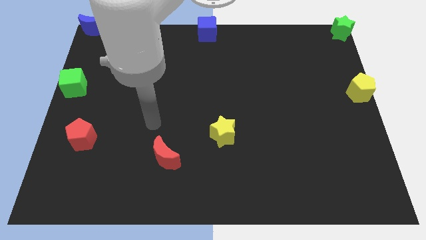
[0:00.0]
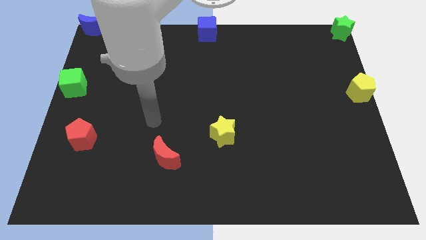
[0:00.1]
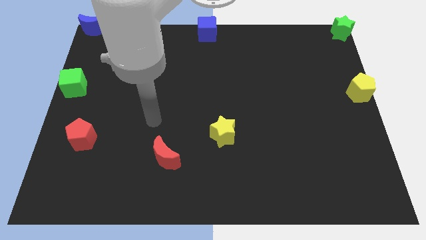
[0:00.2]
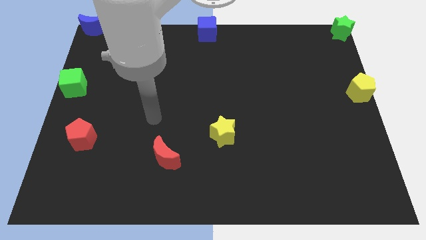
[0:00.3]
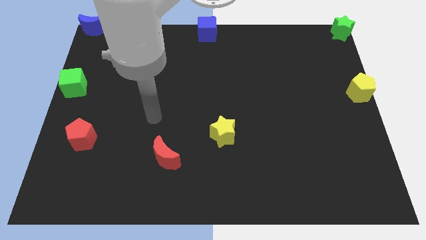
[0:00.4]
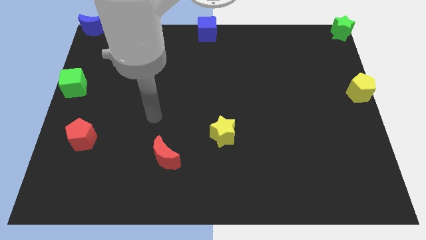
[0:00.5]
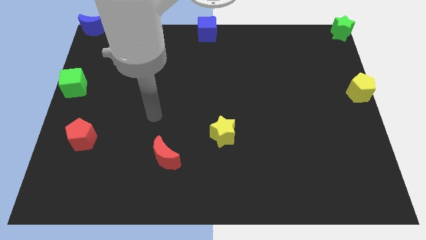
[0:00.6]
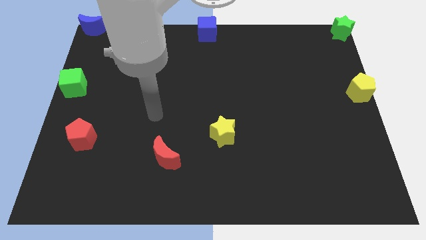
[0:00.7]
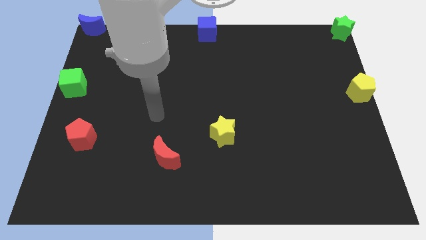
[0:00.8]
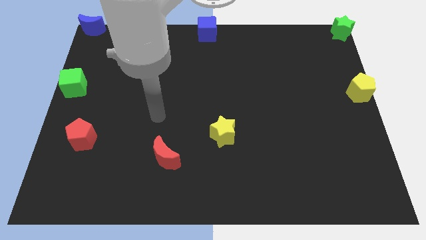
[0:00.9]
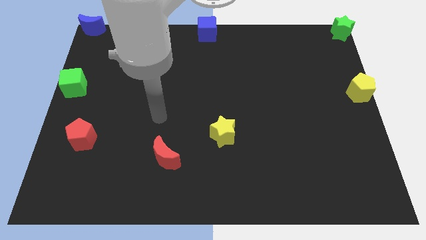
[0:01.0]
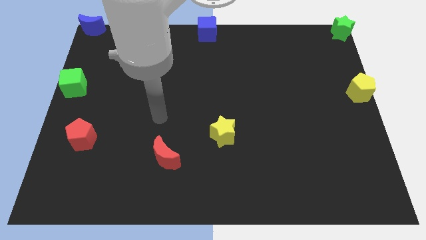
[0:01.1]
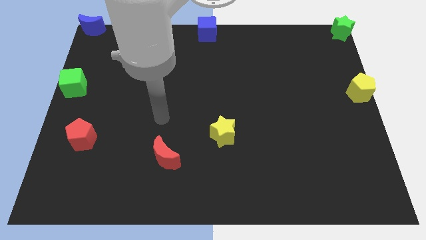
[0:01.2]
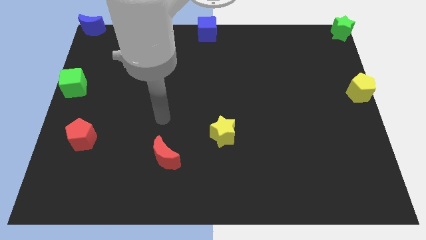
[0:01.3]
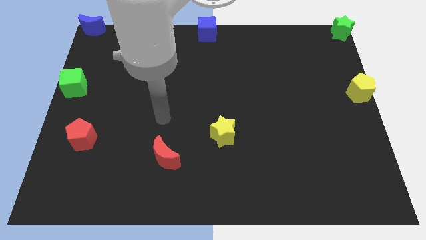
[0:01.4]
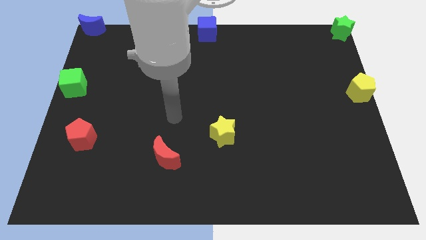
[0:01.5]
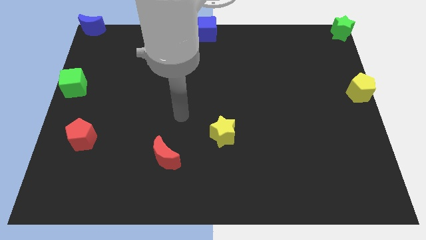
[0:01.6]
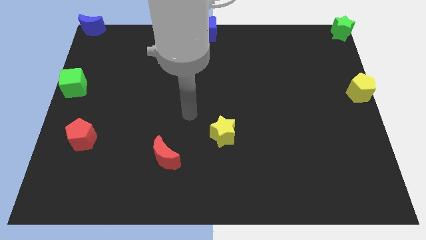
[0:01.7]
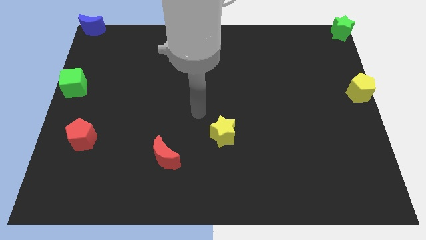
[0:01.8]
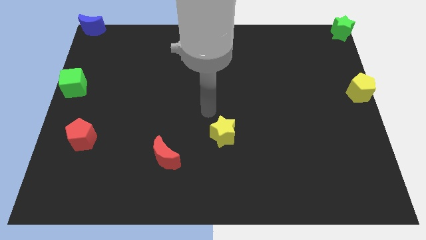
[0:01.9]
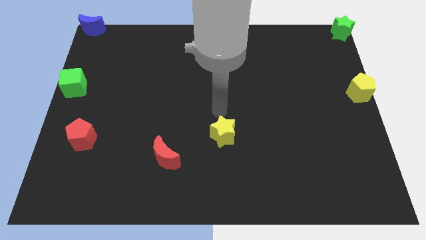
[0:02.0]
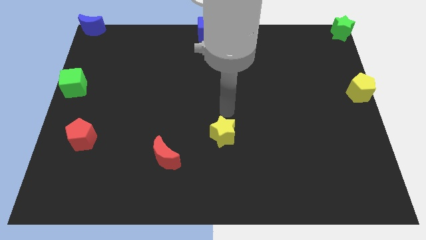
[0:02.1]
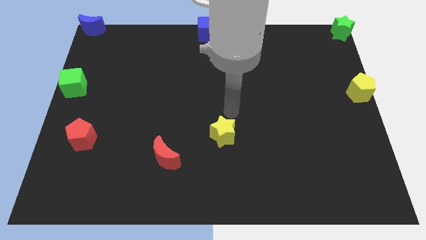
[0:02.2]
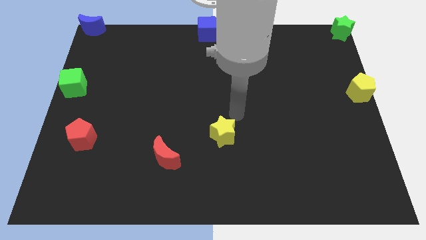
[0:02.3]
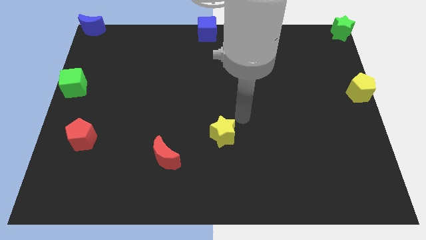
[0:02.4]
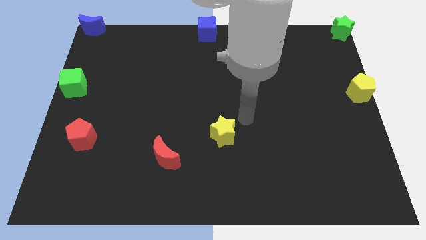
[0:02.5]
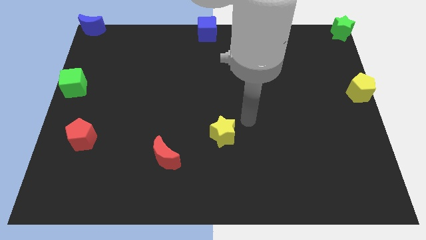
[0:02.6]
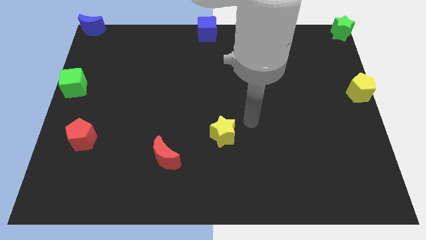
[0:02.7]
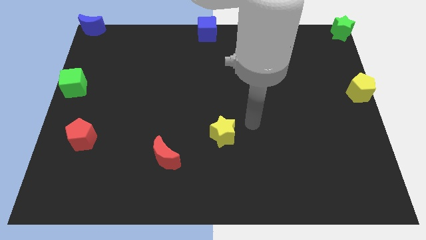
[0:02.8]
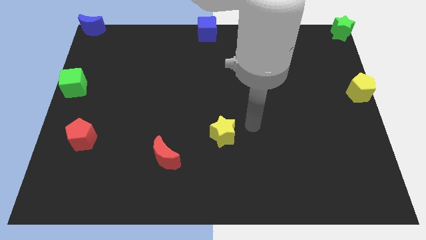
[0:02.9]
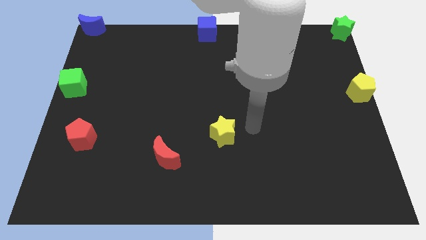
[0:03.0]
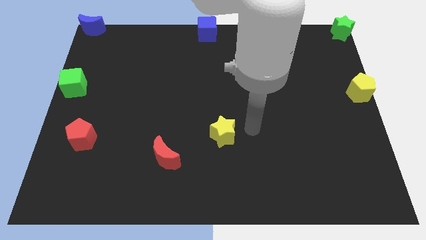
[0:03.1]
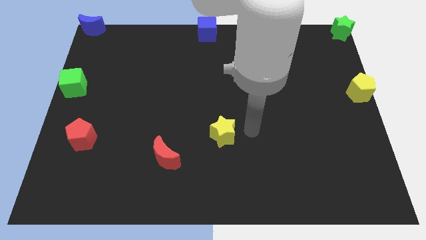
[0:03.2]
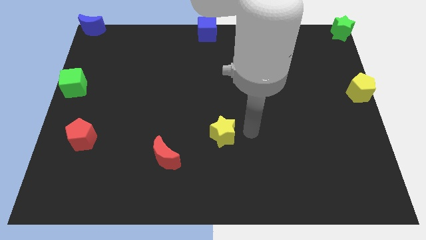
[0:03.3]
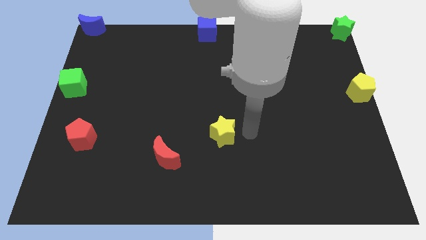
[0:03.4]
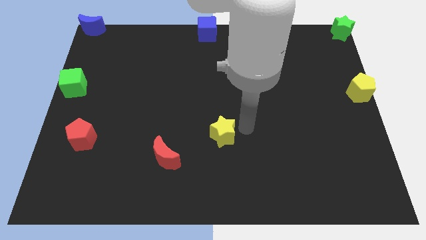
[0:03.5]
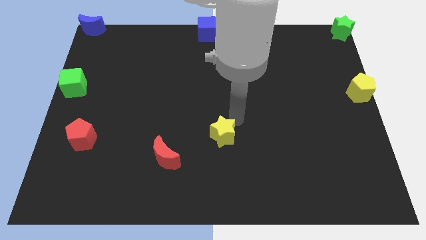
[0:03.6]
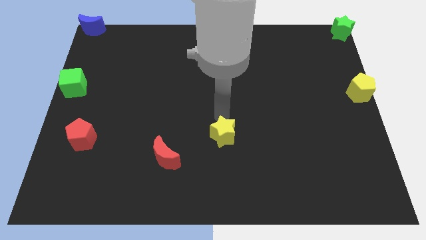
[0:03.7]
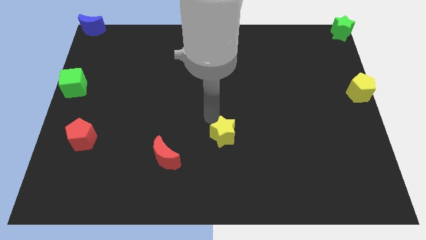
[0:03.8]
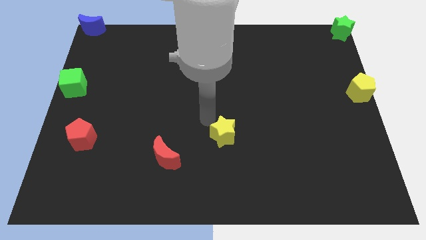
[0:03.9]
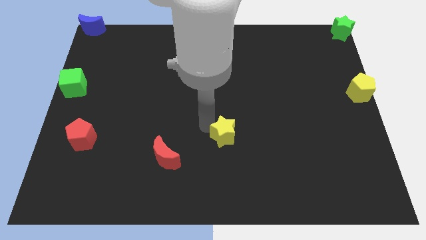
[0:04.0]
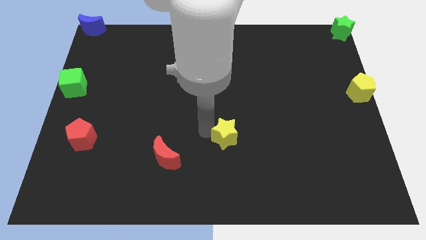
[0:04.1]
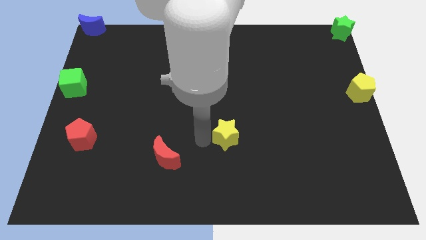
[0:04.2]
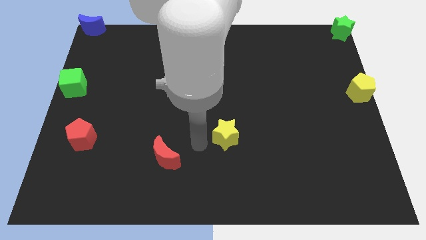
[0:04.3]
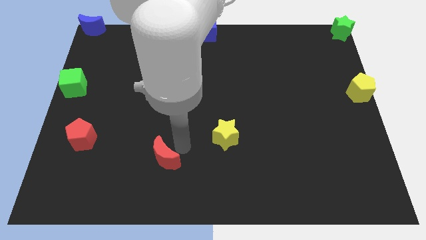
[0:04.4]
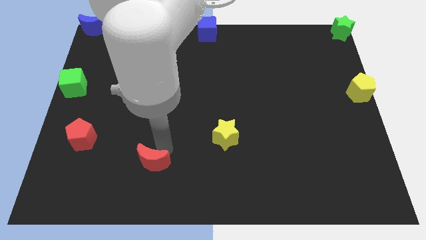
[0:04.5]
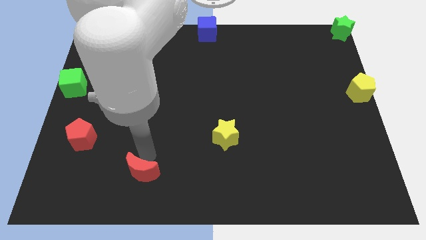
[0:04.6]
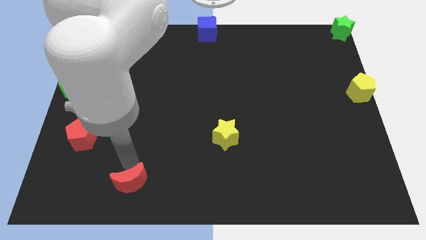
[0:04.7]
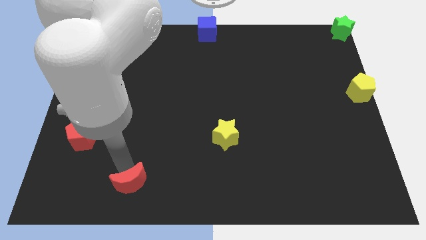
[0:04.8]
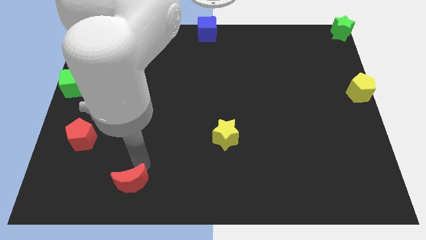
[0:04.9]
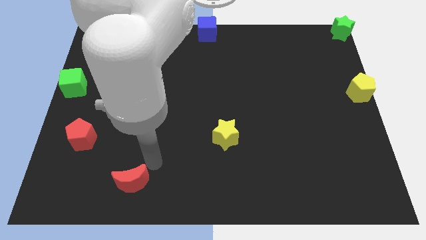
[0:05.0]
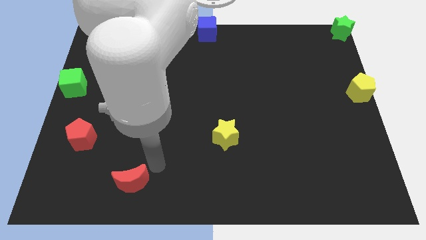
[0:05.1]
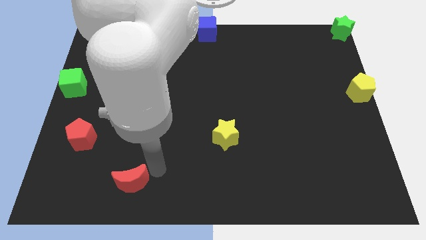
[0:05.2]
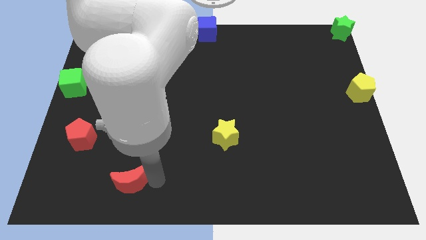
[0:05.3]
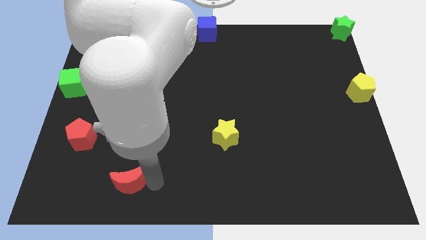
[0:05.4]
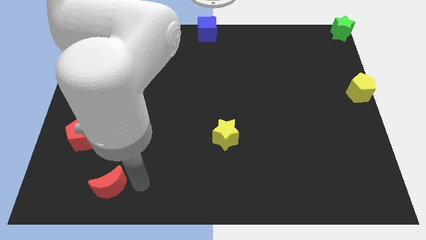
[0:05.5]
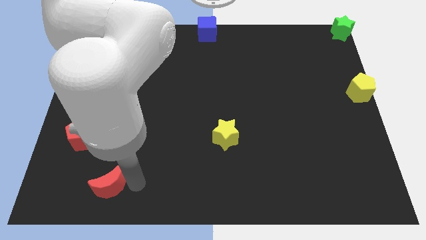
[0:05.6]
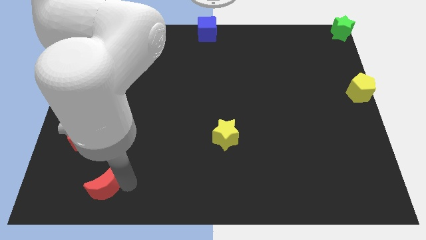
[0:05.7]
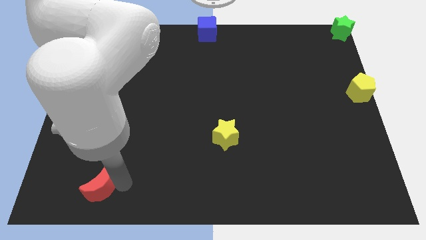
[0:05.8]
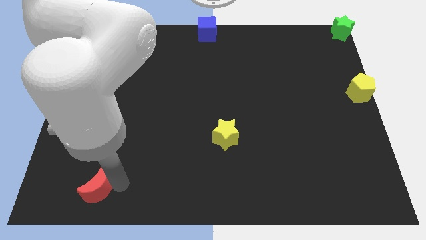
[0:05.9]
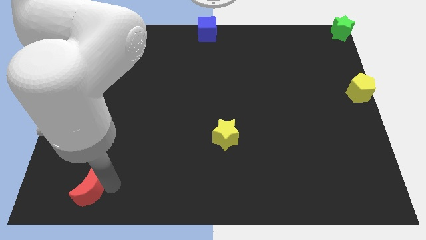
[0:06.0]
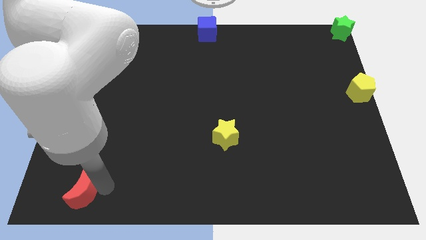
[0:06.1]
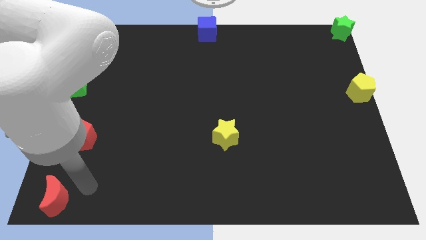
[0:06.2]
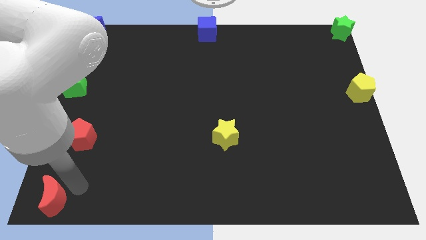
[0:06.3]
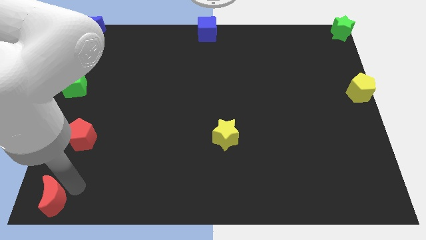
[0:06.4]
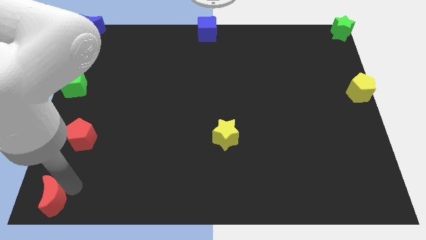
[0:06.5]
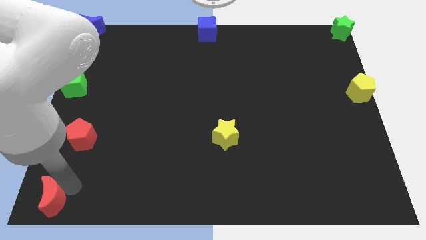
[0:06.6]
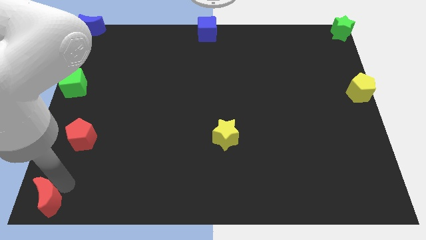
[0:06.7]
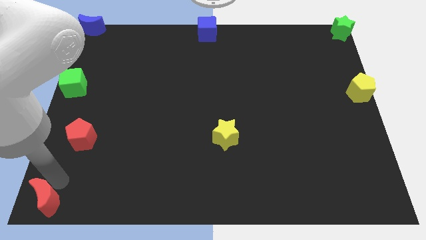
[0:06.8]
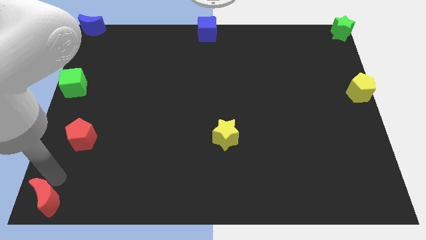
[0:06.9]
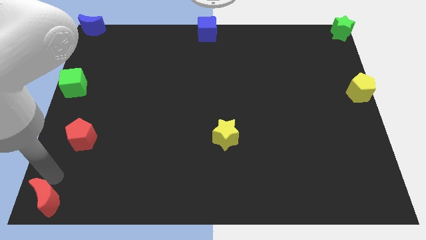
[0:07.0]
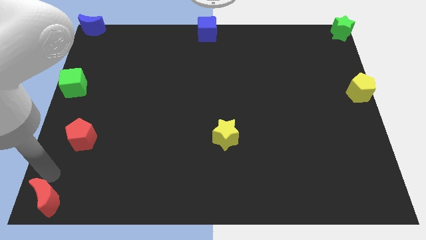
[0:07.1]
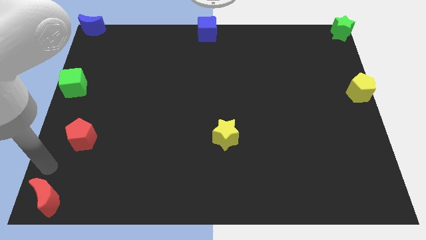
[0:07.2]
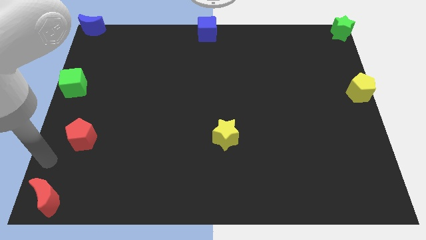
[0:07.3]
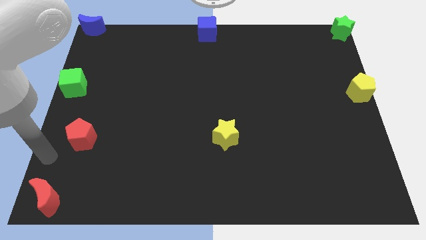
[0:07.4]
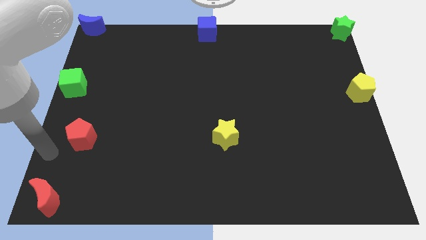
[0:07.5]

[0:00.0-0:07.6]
push the red crescent to the bottom left of the board

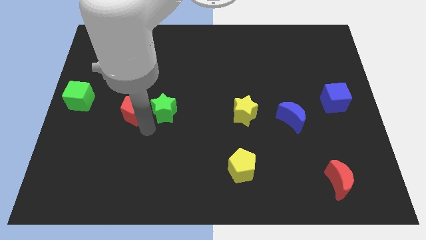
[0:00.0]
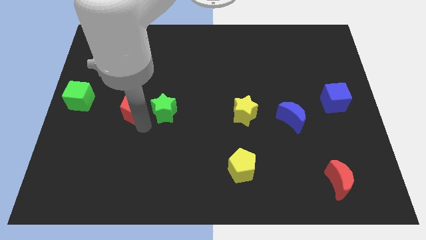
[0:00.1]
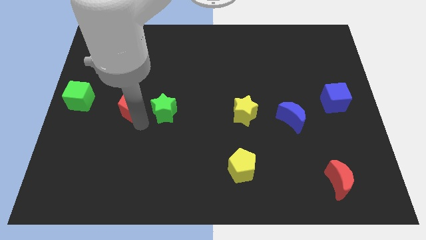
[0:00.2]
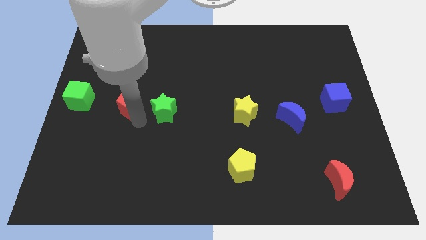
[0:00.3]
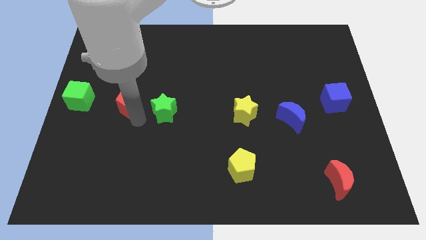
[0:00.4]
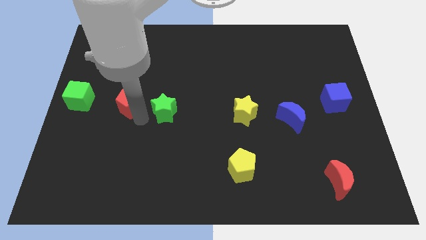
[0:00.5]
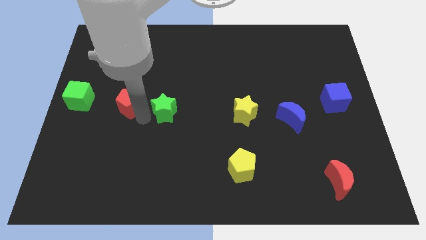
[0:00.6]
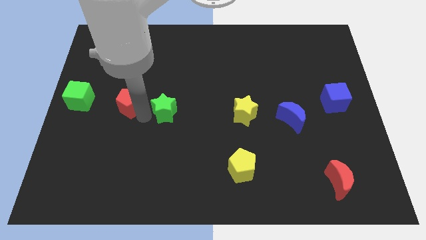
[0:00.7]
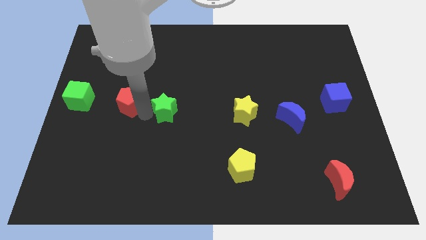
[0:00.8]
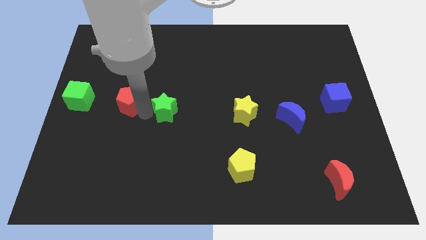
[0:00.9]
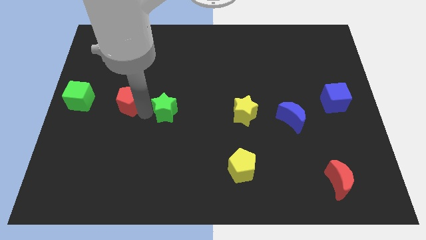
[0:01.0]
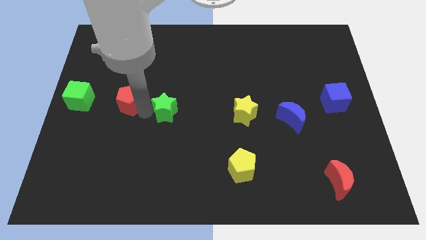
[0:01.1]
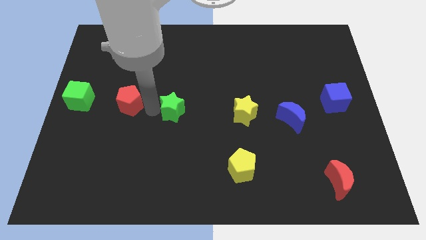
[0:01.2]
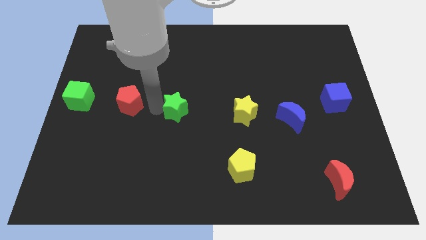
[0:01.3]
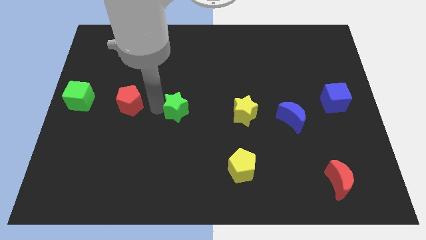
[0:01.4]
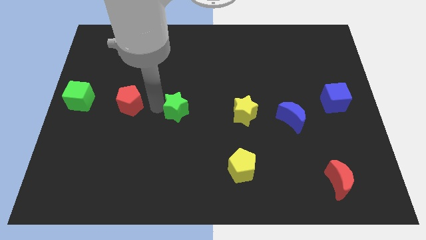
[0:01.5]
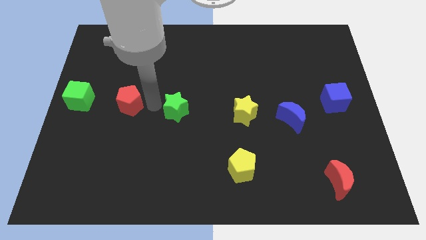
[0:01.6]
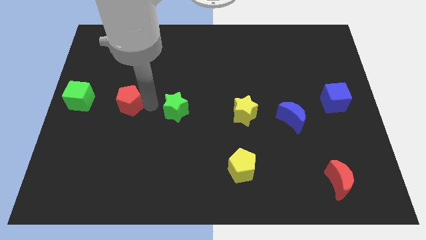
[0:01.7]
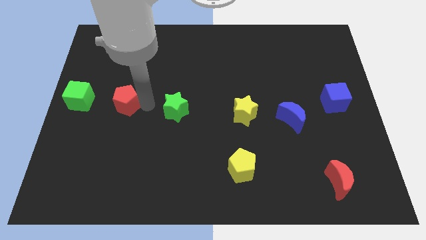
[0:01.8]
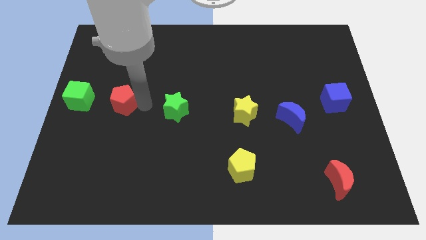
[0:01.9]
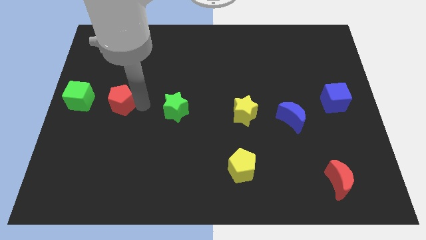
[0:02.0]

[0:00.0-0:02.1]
move the red pentagon to the horizontal line
